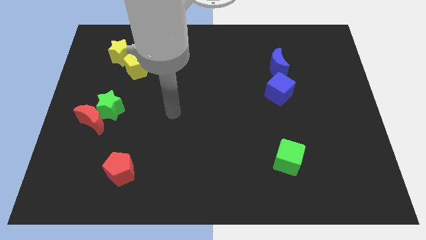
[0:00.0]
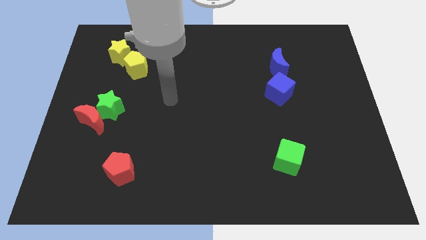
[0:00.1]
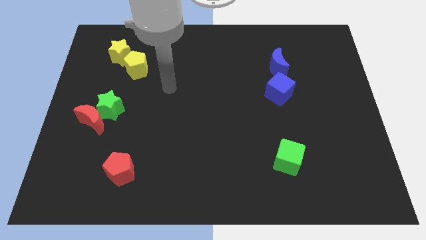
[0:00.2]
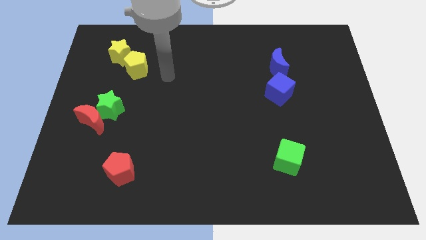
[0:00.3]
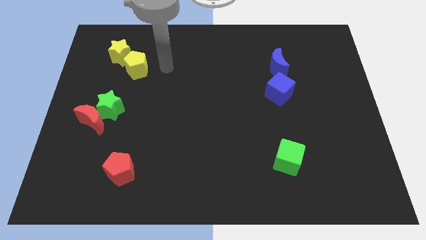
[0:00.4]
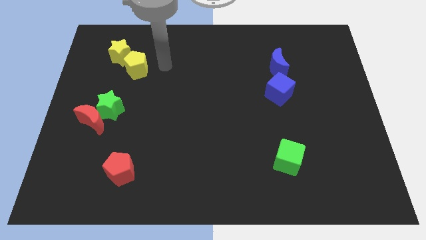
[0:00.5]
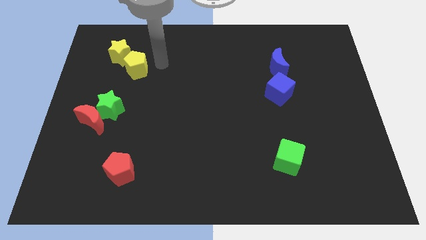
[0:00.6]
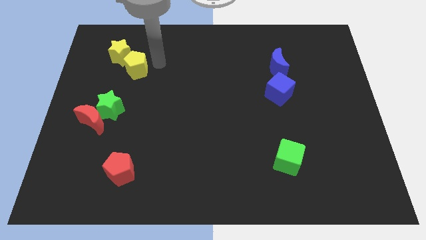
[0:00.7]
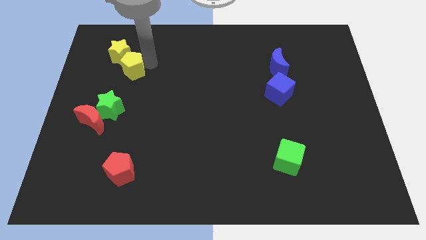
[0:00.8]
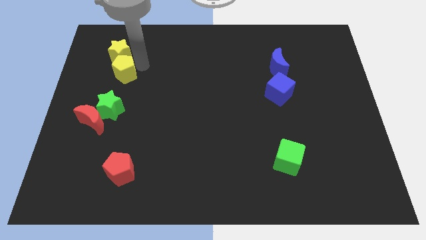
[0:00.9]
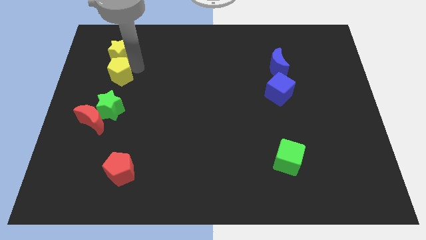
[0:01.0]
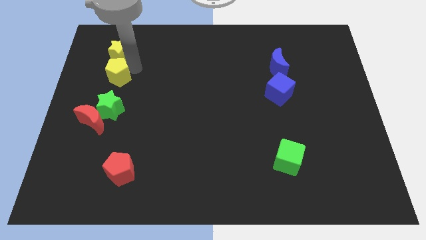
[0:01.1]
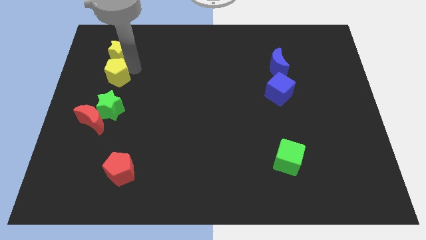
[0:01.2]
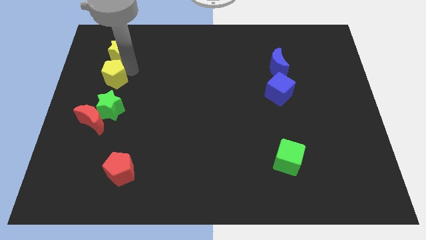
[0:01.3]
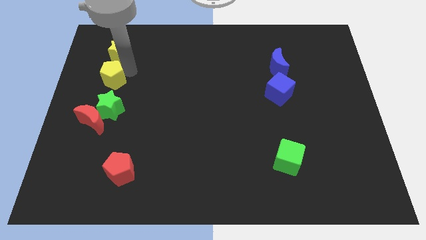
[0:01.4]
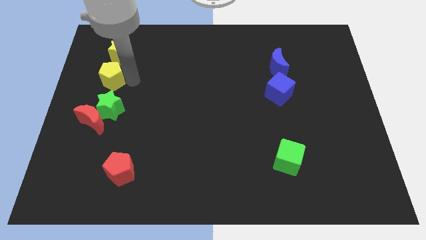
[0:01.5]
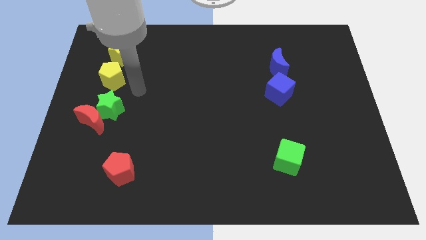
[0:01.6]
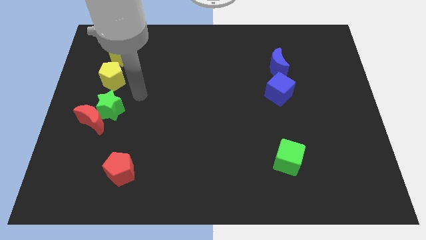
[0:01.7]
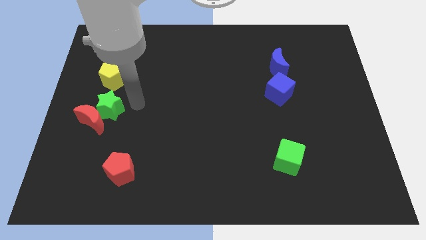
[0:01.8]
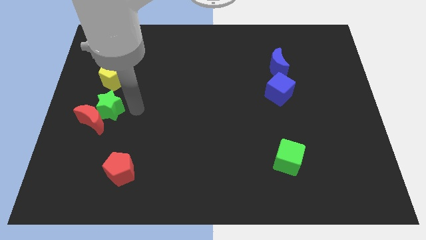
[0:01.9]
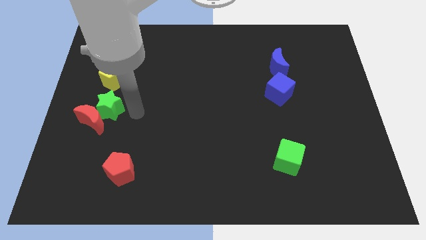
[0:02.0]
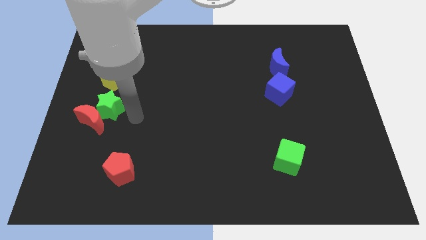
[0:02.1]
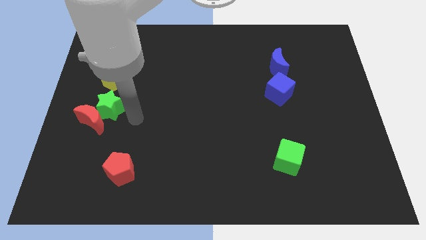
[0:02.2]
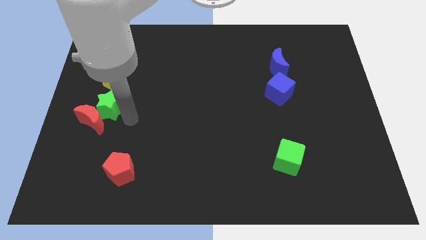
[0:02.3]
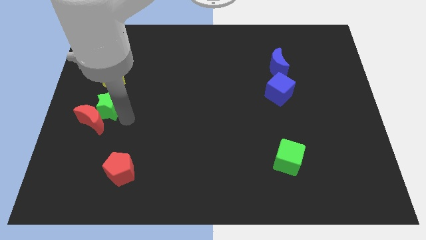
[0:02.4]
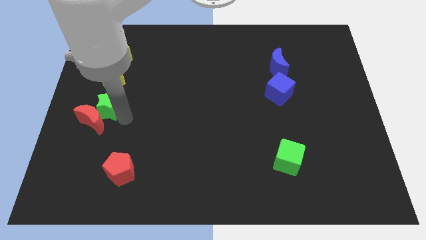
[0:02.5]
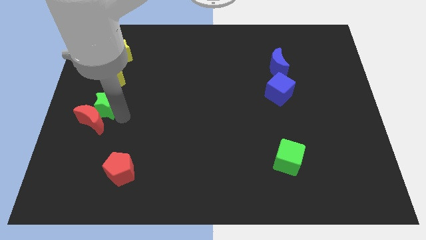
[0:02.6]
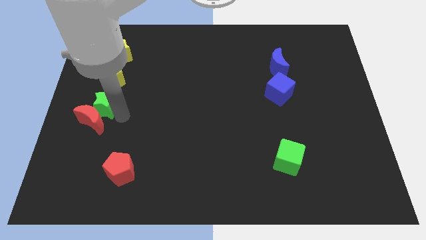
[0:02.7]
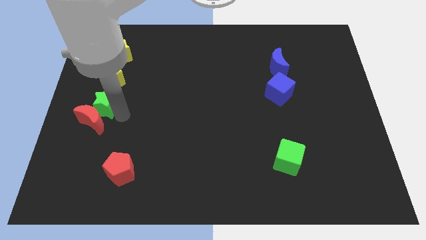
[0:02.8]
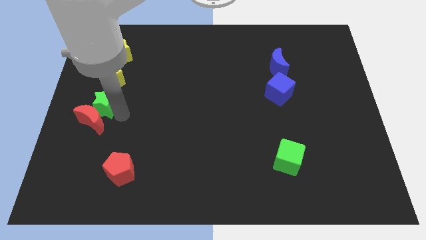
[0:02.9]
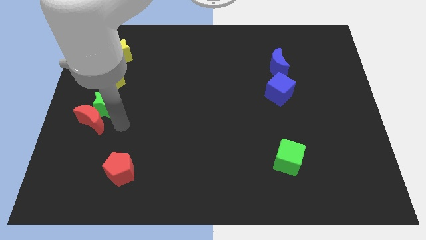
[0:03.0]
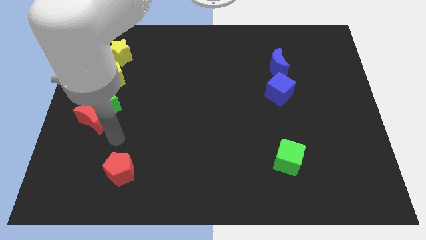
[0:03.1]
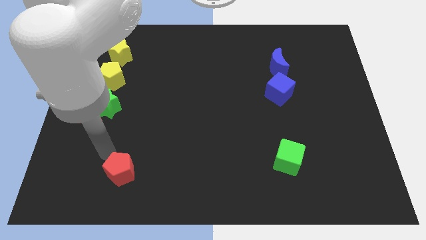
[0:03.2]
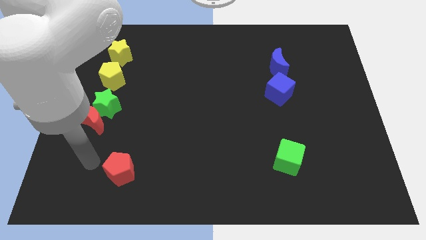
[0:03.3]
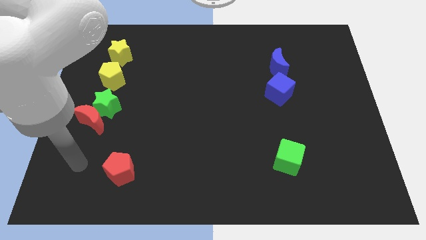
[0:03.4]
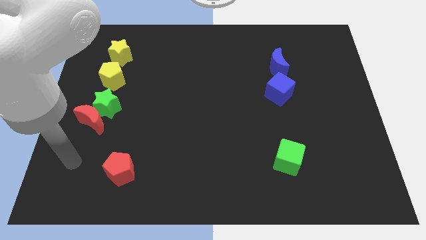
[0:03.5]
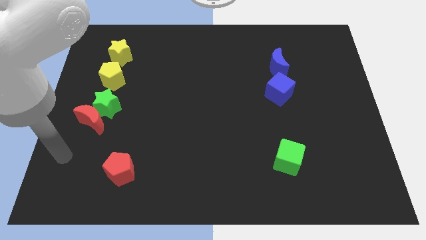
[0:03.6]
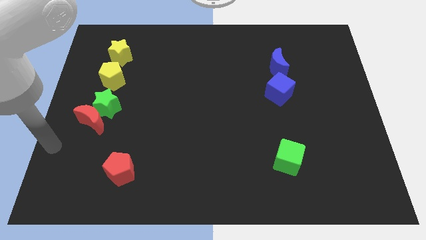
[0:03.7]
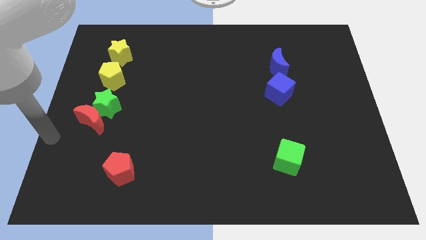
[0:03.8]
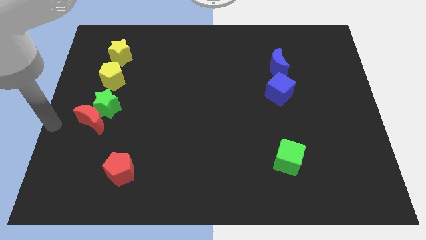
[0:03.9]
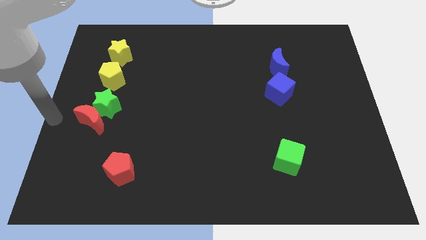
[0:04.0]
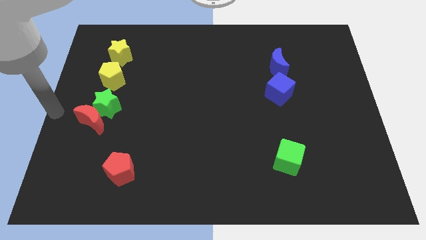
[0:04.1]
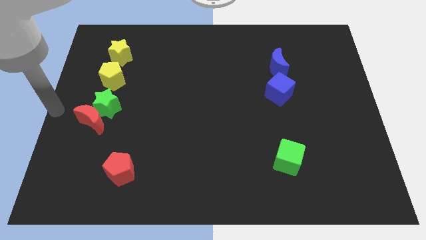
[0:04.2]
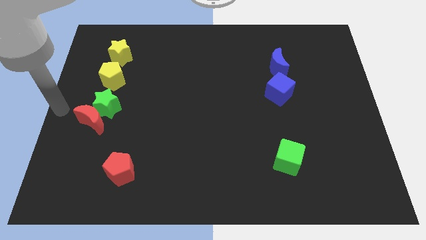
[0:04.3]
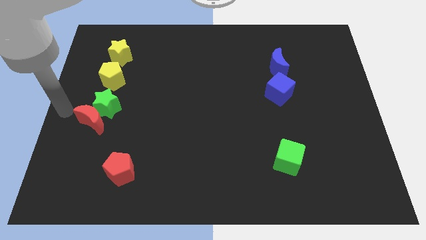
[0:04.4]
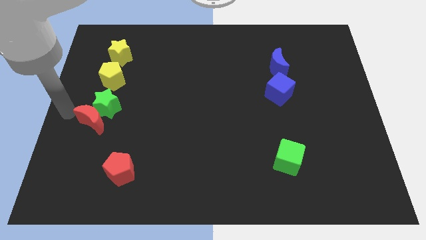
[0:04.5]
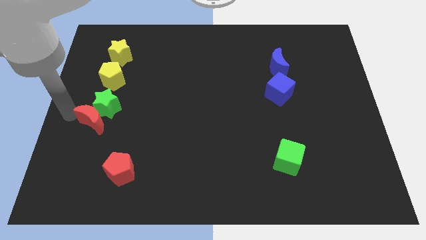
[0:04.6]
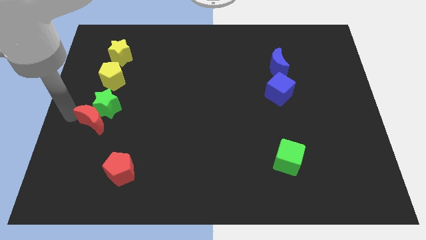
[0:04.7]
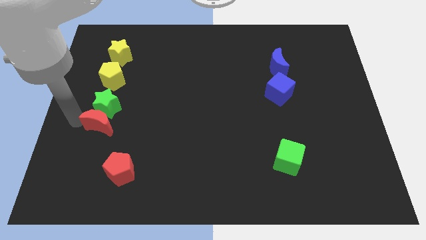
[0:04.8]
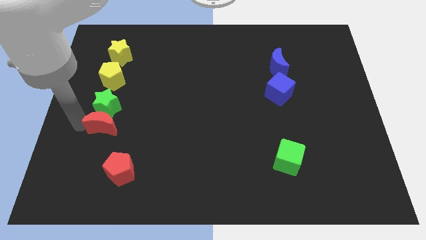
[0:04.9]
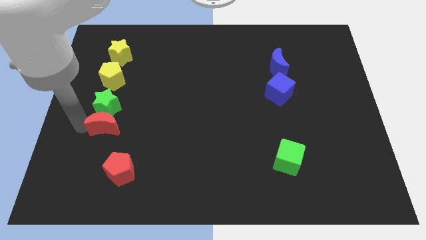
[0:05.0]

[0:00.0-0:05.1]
slide yellow pentagon to the bottom of the yellow star

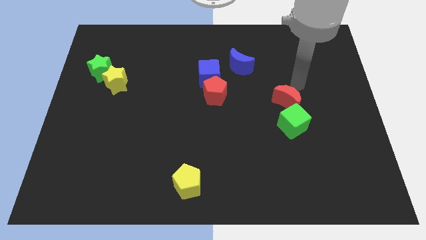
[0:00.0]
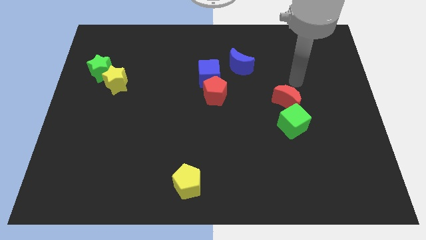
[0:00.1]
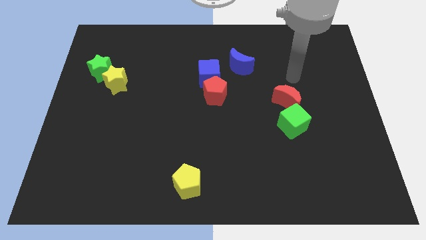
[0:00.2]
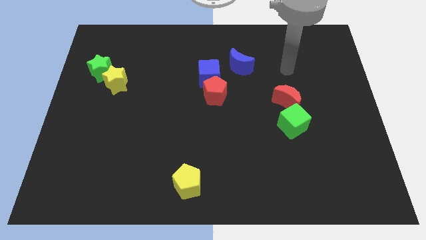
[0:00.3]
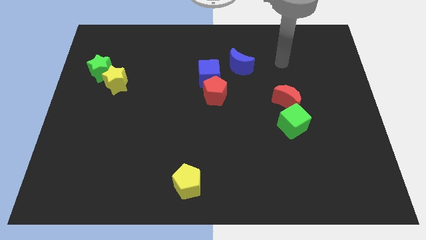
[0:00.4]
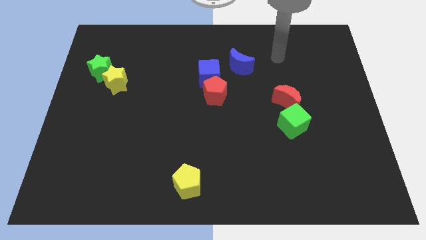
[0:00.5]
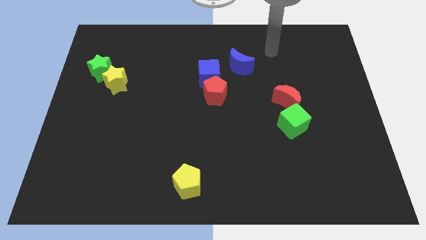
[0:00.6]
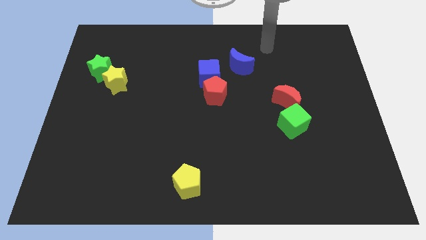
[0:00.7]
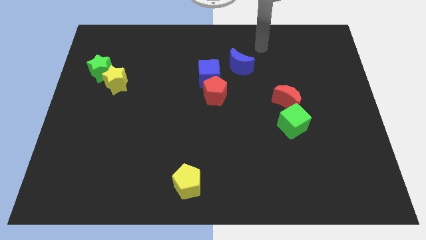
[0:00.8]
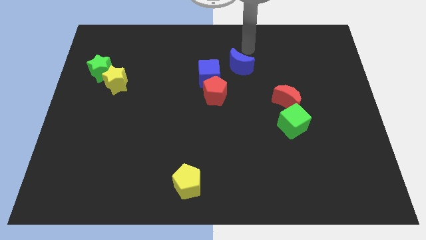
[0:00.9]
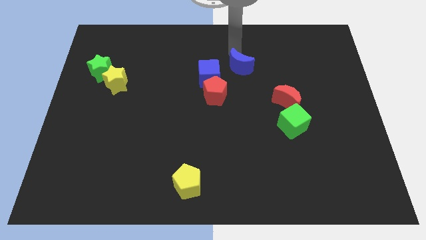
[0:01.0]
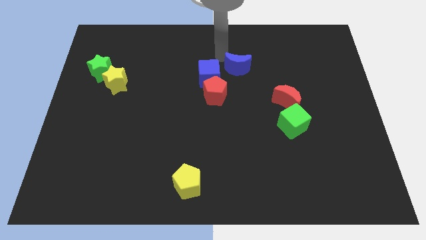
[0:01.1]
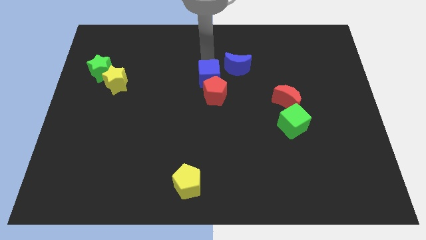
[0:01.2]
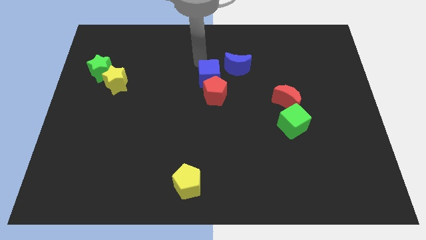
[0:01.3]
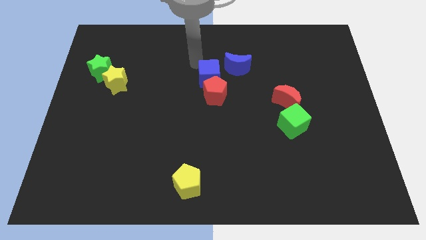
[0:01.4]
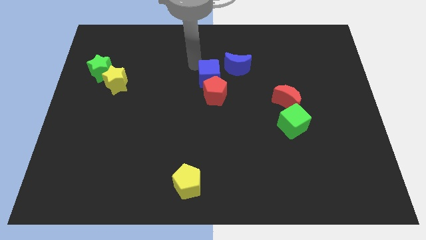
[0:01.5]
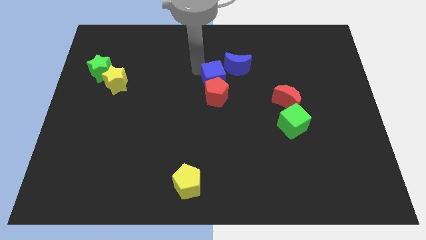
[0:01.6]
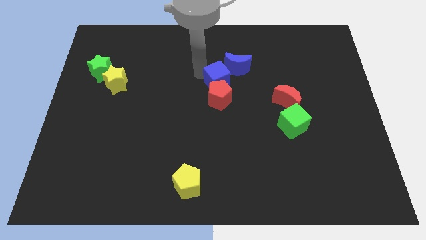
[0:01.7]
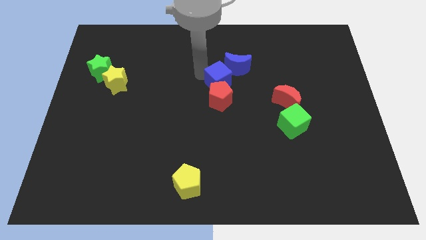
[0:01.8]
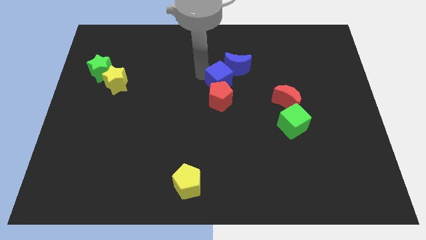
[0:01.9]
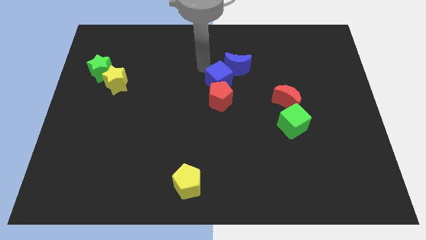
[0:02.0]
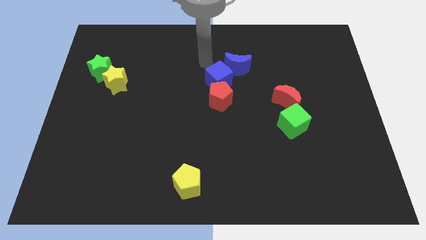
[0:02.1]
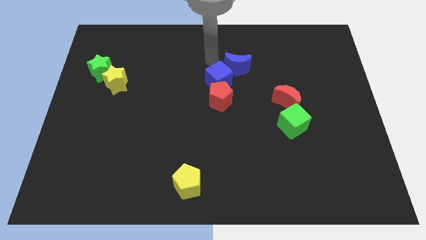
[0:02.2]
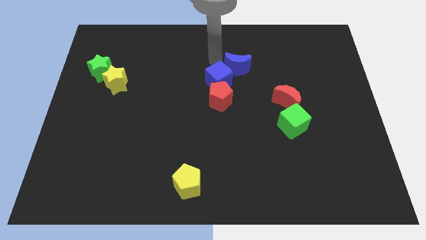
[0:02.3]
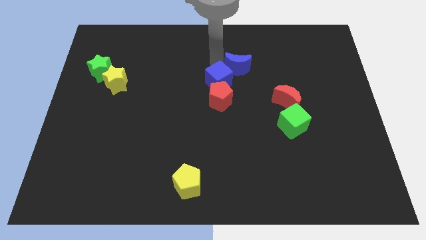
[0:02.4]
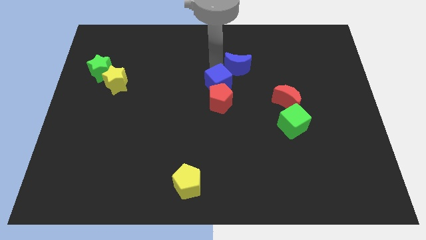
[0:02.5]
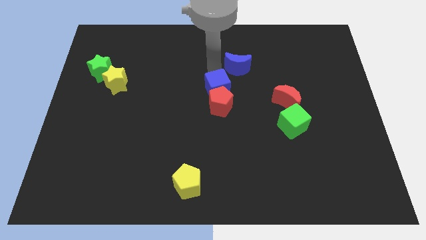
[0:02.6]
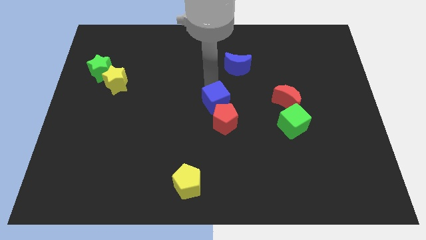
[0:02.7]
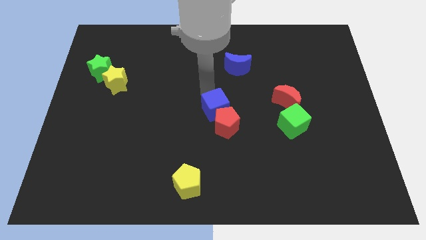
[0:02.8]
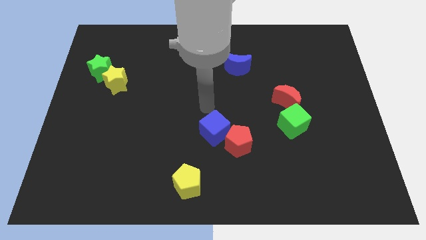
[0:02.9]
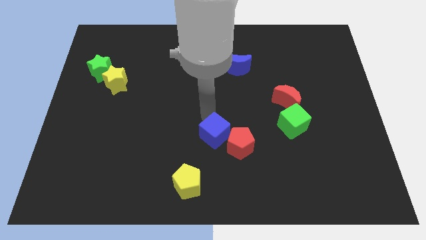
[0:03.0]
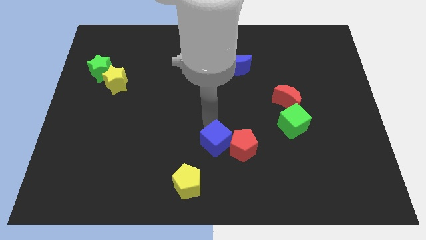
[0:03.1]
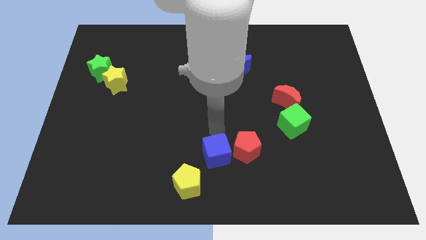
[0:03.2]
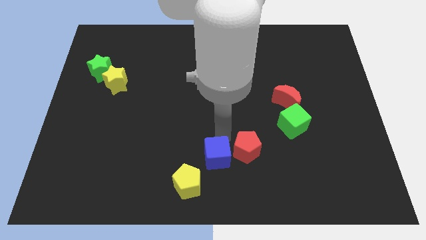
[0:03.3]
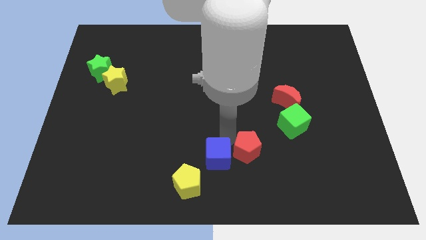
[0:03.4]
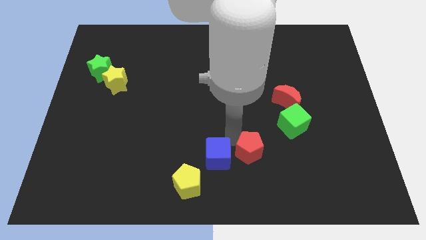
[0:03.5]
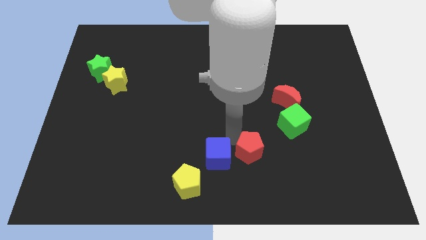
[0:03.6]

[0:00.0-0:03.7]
slide the red pentagon and blue cube in between the green cube and yellow pentagon

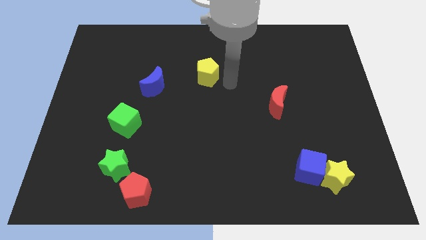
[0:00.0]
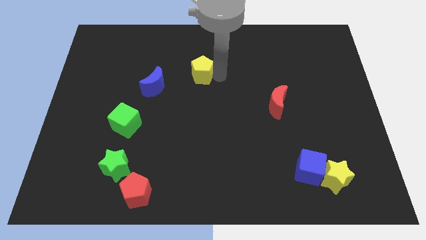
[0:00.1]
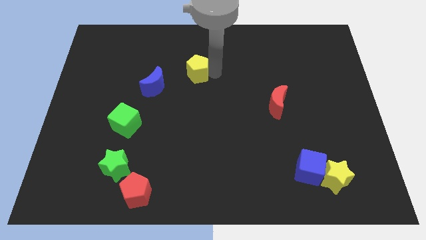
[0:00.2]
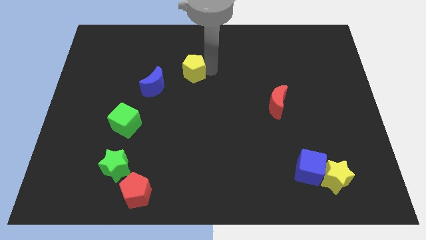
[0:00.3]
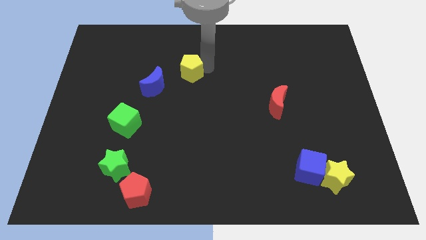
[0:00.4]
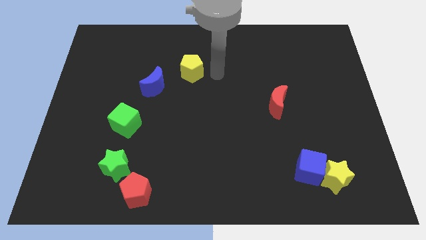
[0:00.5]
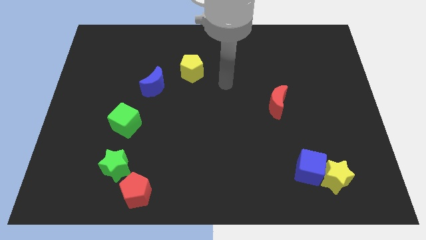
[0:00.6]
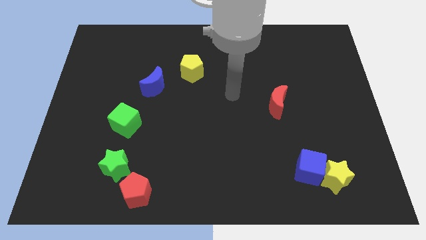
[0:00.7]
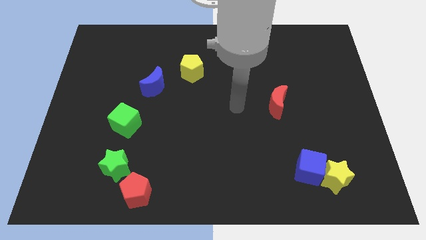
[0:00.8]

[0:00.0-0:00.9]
drag the yellow pentagon slightly to the left
